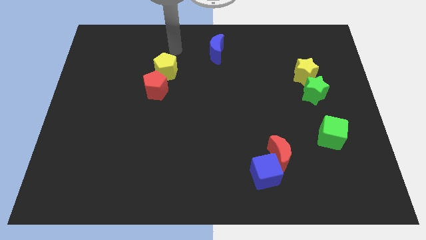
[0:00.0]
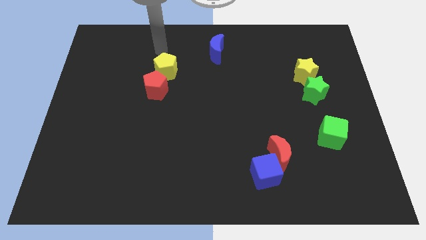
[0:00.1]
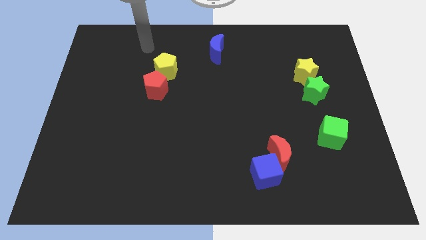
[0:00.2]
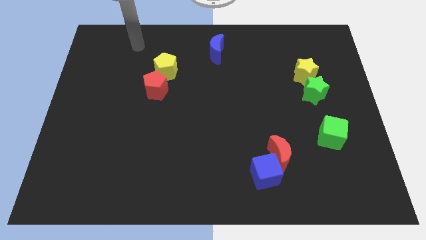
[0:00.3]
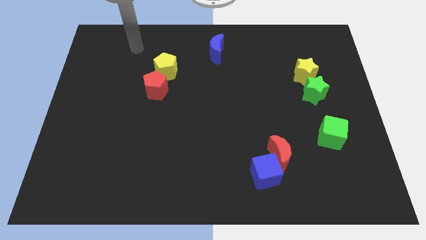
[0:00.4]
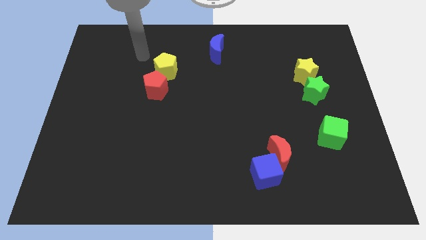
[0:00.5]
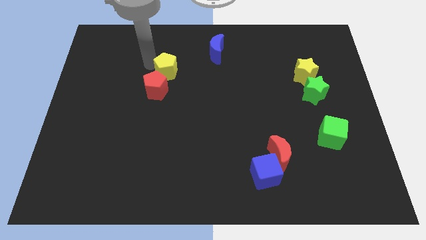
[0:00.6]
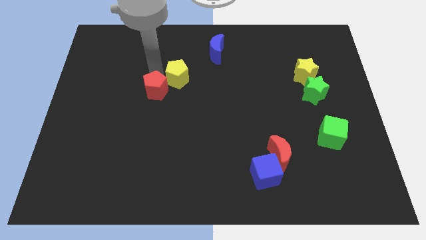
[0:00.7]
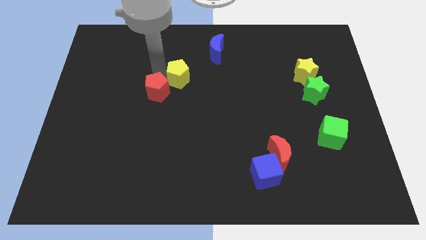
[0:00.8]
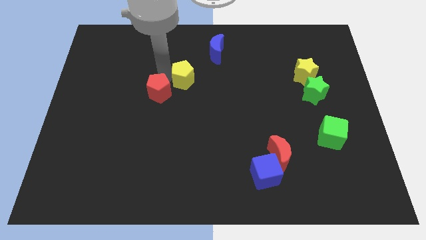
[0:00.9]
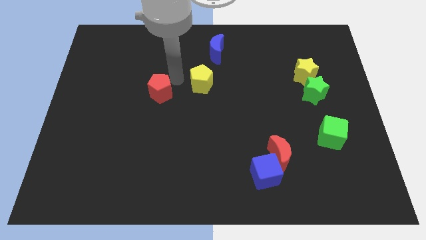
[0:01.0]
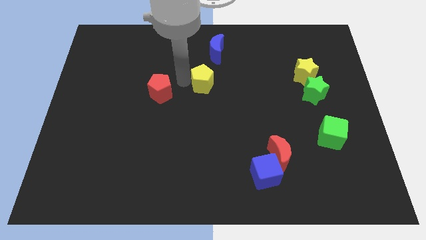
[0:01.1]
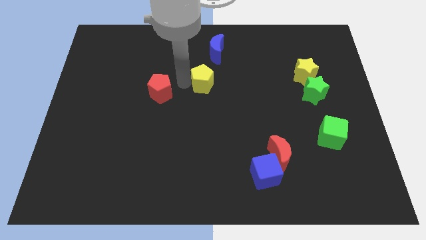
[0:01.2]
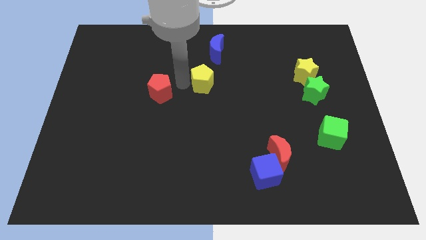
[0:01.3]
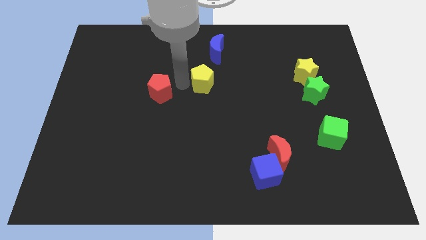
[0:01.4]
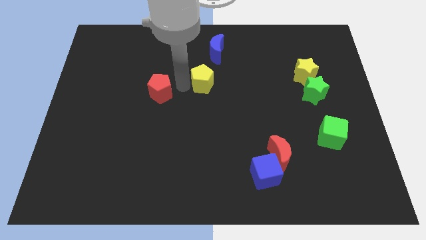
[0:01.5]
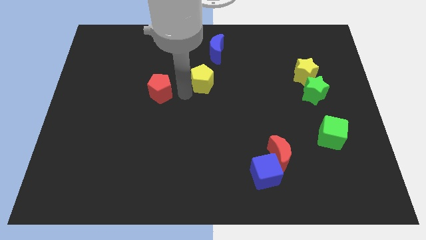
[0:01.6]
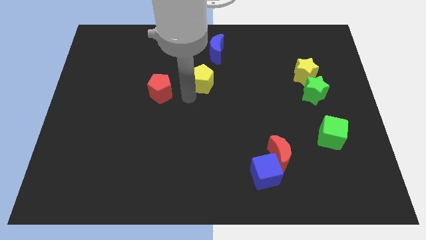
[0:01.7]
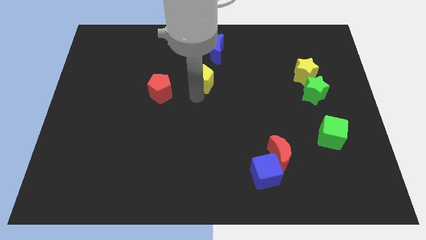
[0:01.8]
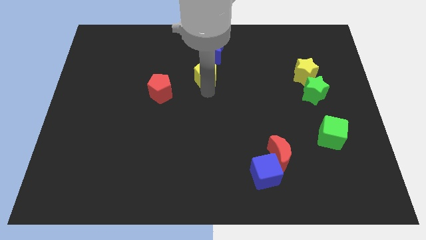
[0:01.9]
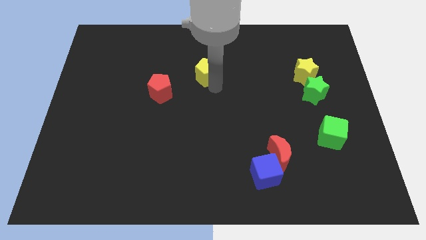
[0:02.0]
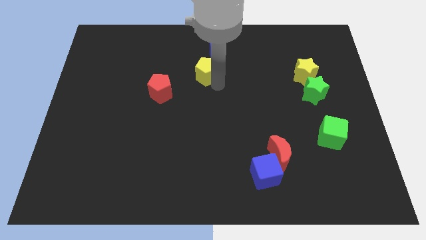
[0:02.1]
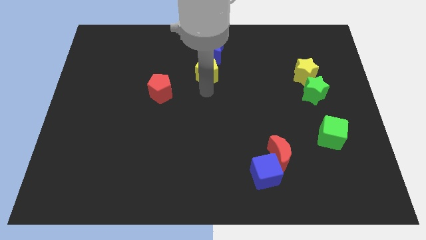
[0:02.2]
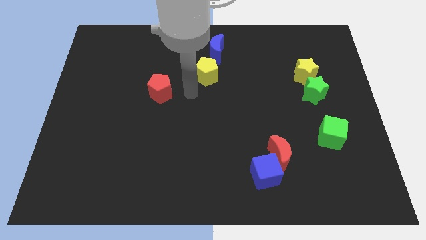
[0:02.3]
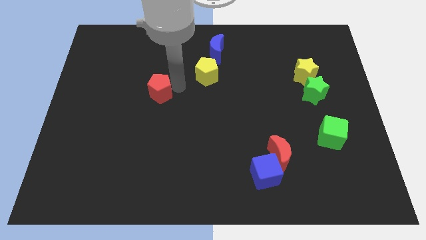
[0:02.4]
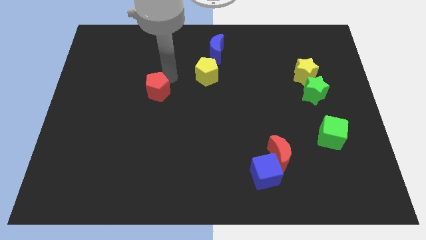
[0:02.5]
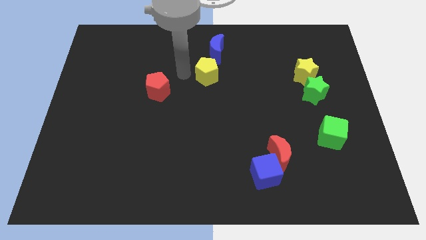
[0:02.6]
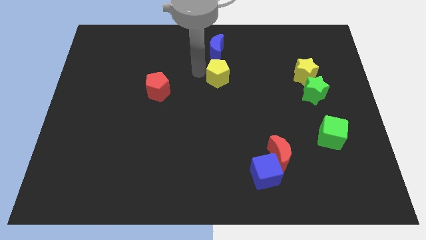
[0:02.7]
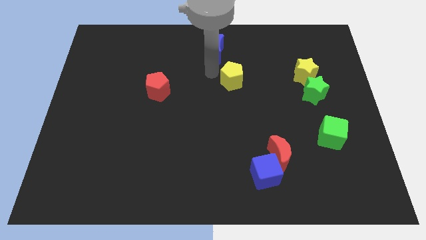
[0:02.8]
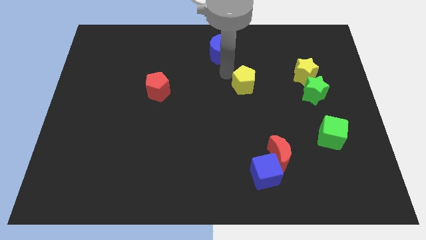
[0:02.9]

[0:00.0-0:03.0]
separate the yellow pentagon from the red pentagon

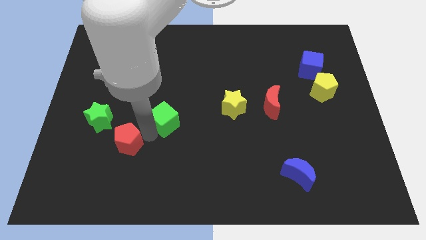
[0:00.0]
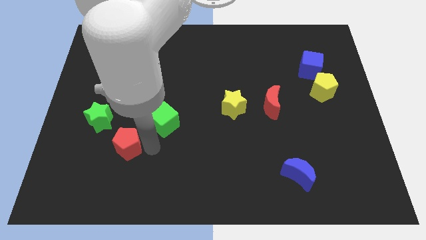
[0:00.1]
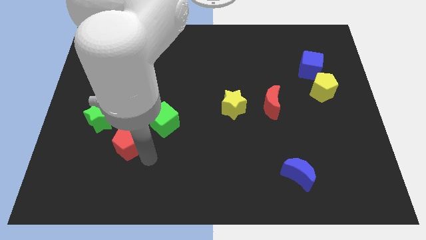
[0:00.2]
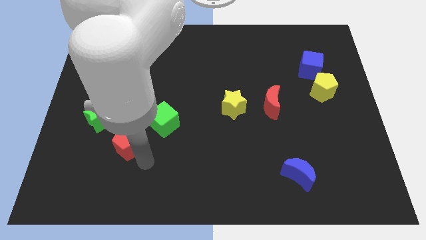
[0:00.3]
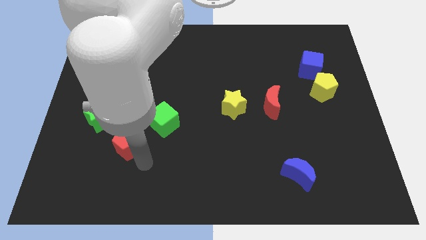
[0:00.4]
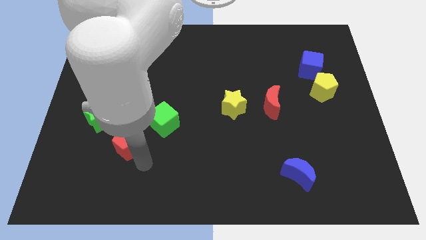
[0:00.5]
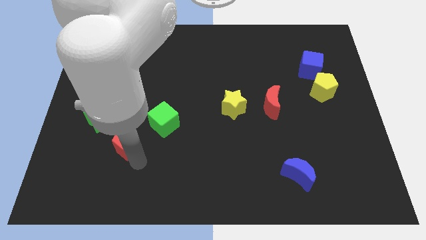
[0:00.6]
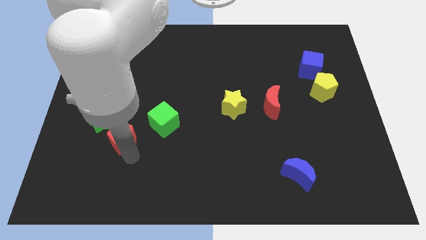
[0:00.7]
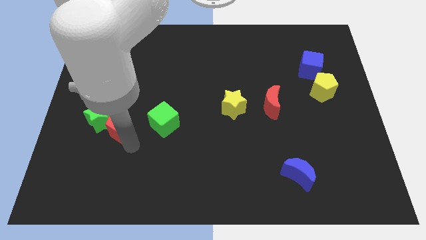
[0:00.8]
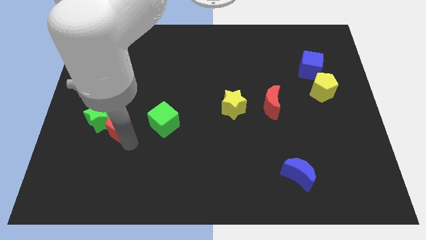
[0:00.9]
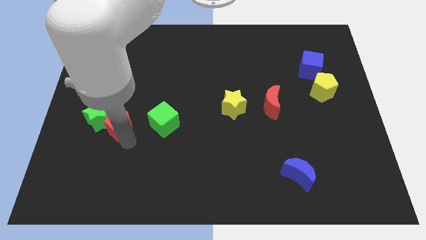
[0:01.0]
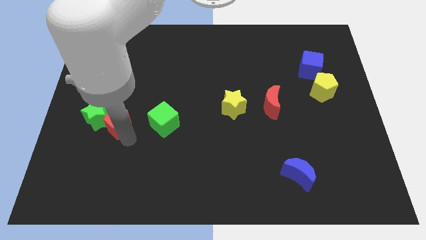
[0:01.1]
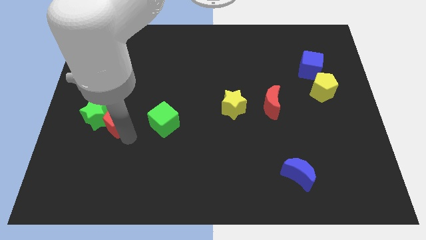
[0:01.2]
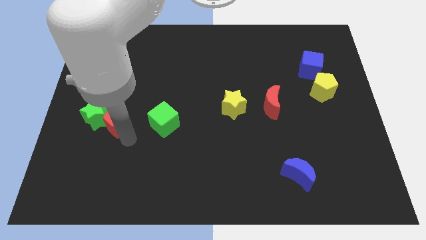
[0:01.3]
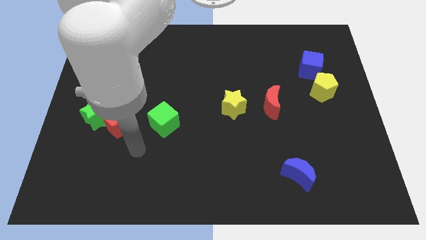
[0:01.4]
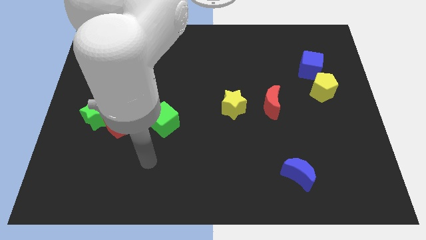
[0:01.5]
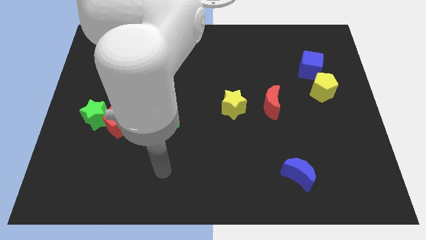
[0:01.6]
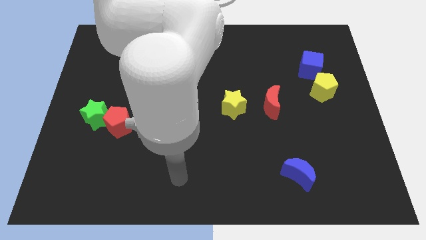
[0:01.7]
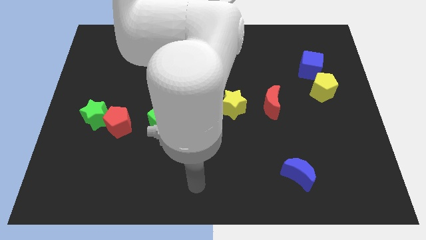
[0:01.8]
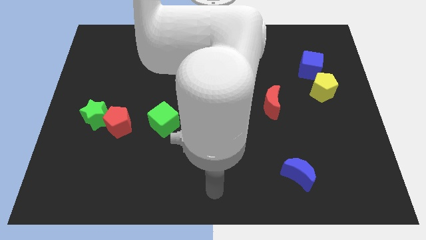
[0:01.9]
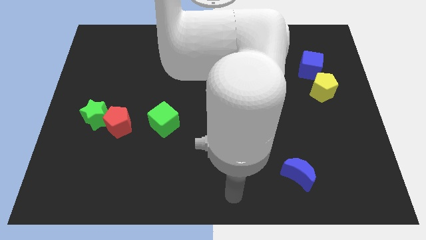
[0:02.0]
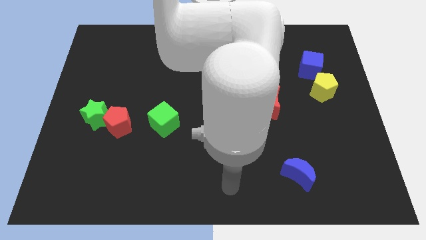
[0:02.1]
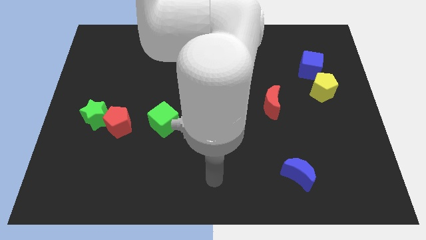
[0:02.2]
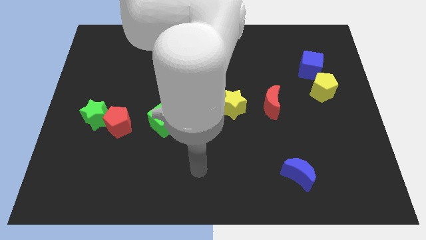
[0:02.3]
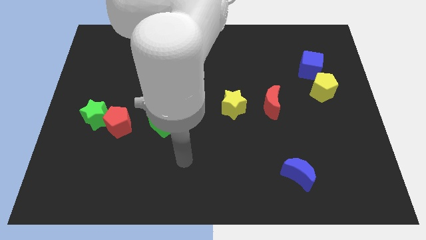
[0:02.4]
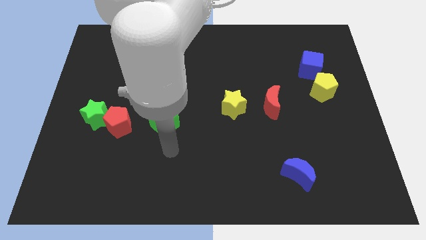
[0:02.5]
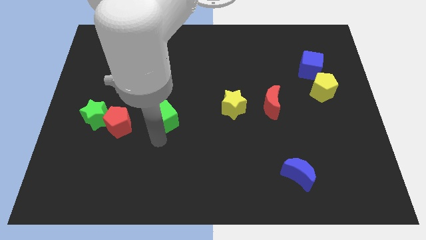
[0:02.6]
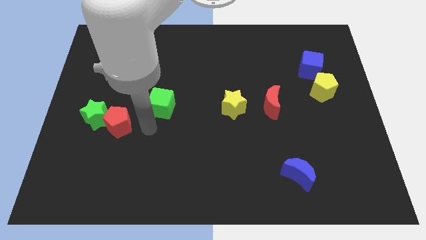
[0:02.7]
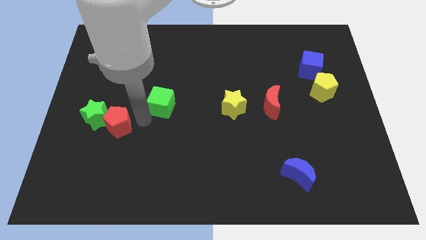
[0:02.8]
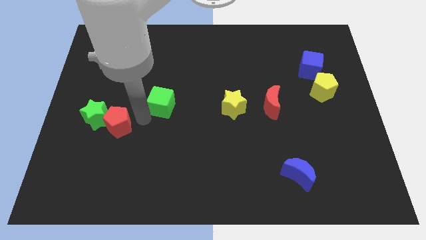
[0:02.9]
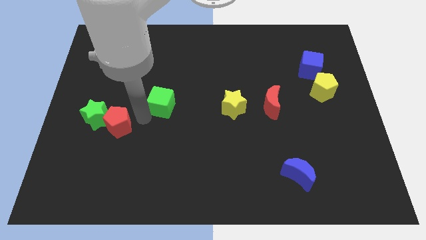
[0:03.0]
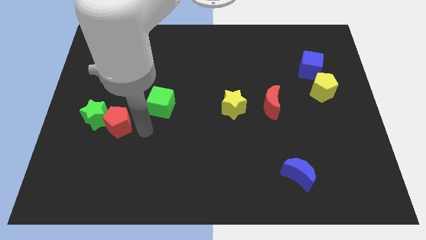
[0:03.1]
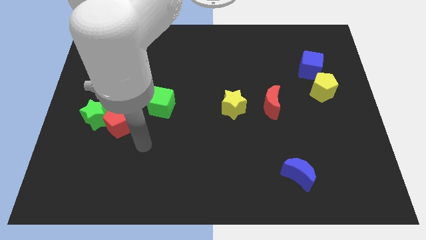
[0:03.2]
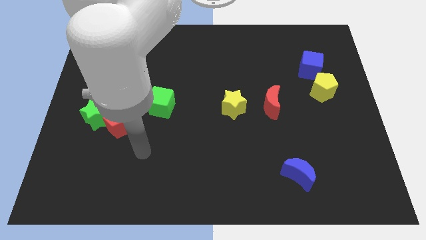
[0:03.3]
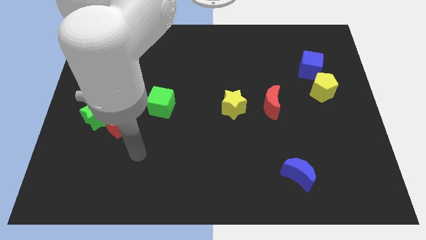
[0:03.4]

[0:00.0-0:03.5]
move the red pentagon to the diagonal right of the green star push green cube towards top

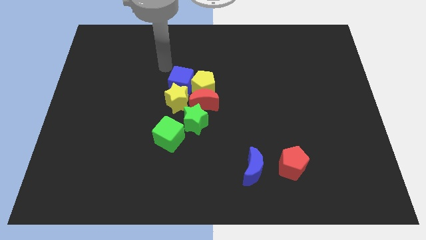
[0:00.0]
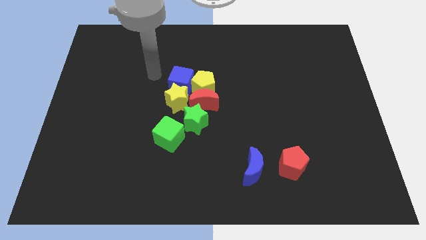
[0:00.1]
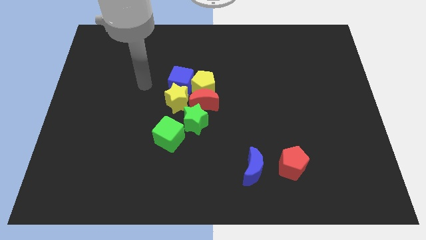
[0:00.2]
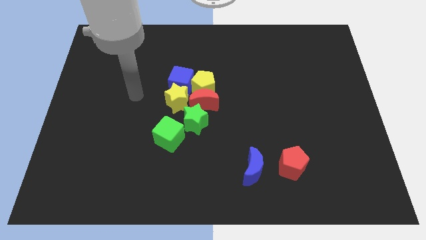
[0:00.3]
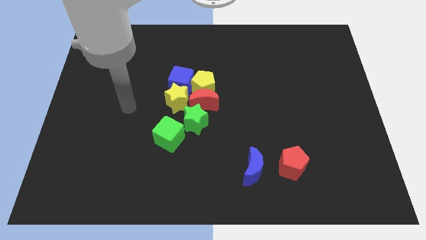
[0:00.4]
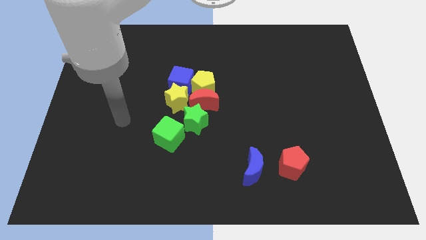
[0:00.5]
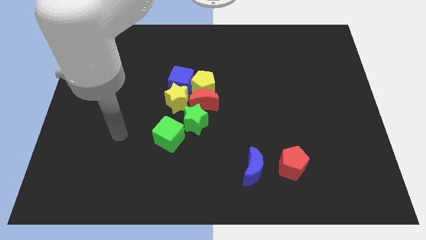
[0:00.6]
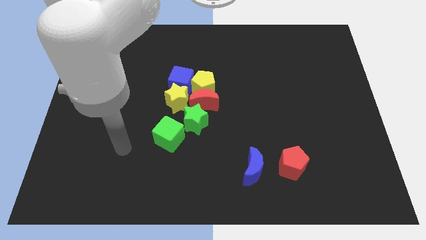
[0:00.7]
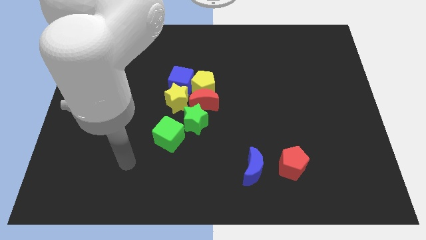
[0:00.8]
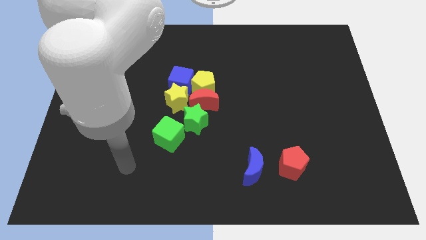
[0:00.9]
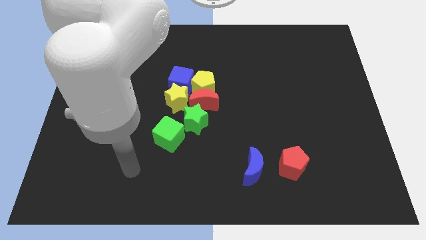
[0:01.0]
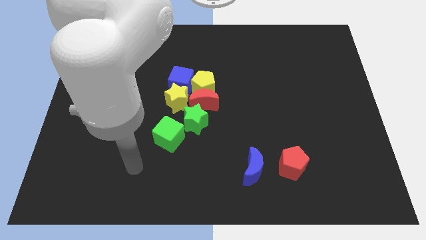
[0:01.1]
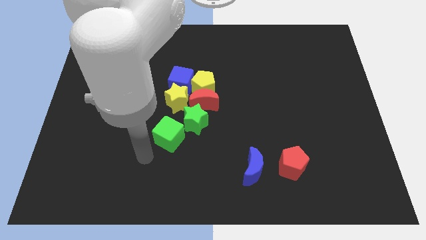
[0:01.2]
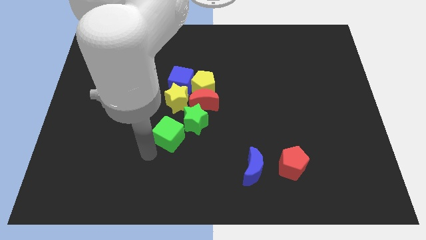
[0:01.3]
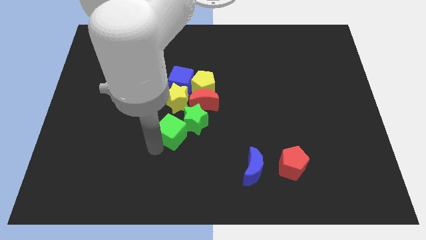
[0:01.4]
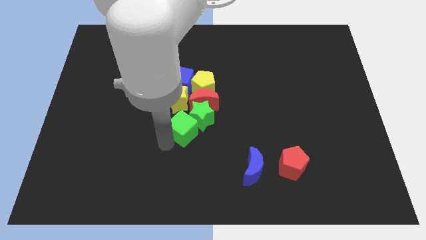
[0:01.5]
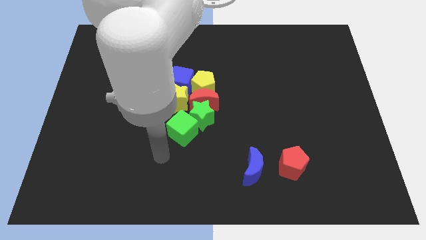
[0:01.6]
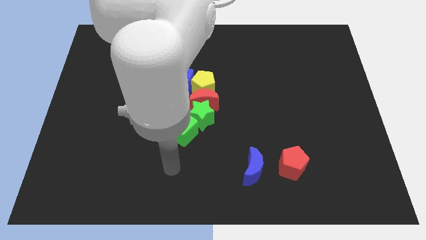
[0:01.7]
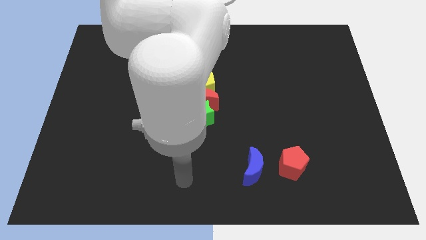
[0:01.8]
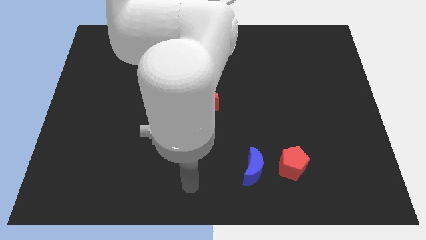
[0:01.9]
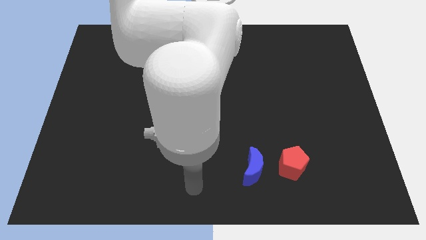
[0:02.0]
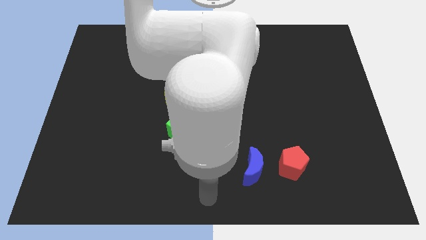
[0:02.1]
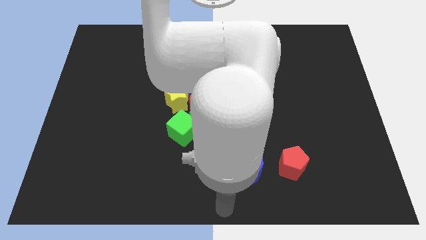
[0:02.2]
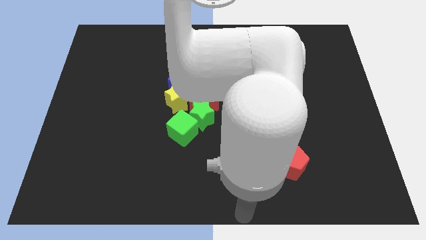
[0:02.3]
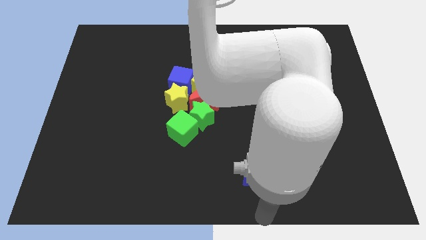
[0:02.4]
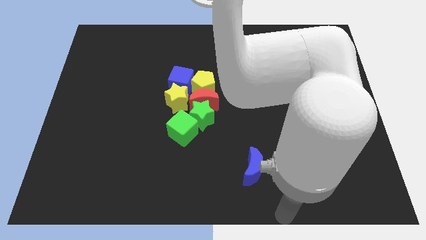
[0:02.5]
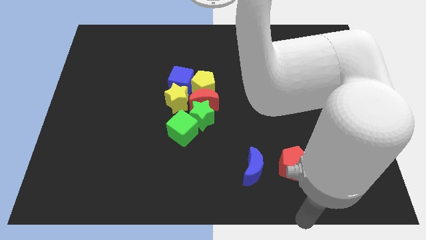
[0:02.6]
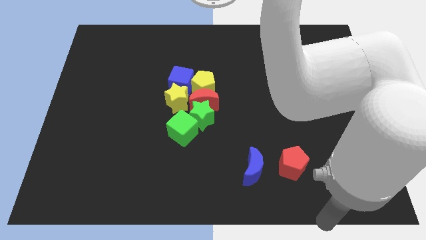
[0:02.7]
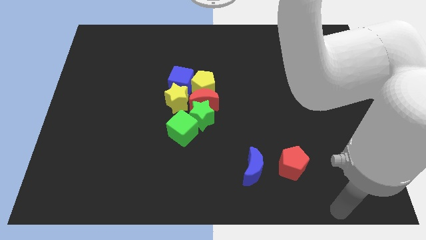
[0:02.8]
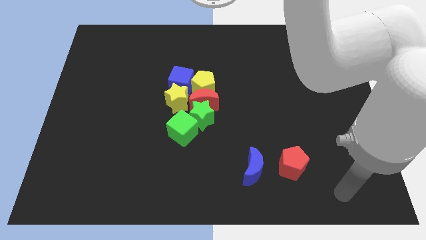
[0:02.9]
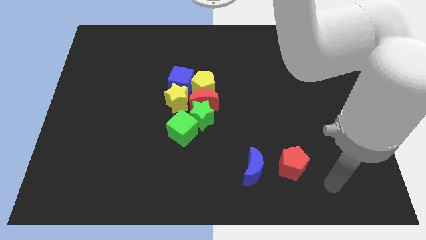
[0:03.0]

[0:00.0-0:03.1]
push the green cube into the green star and move away
